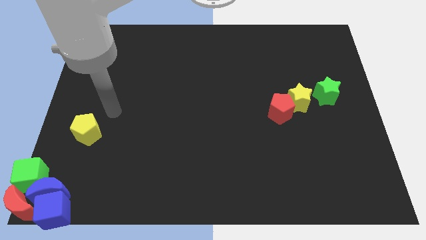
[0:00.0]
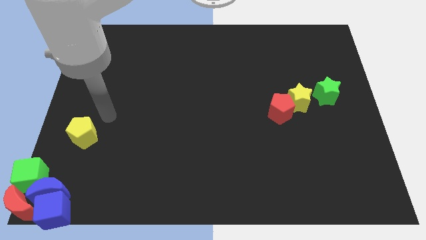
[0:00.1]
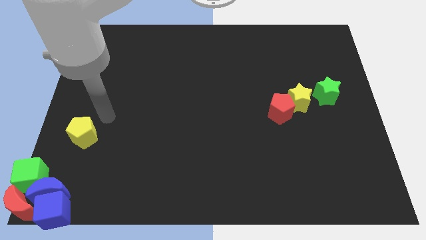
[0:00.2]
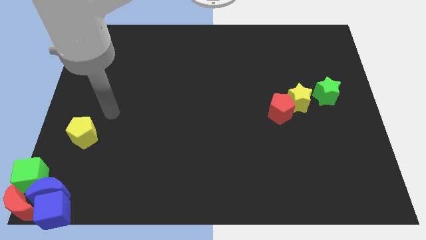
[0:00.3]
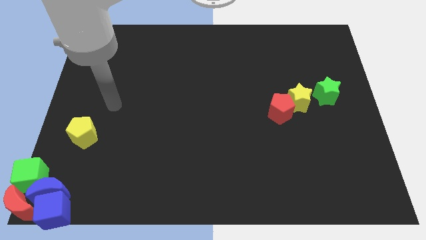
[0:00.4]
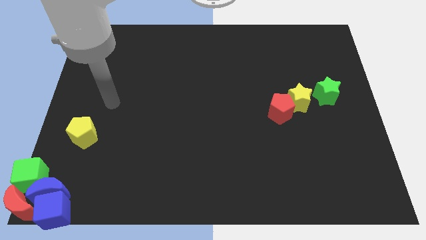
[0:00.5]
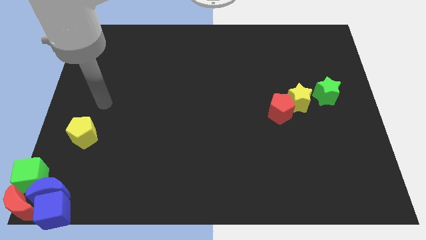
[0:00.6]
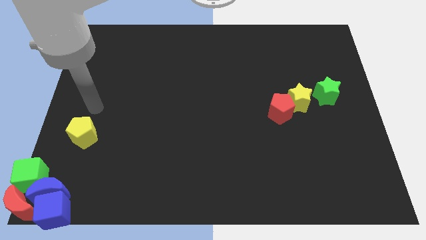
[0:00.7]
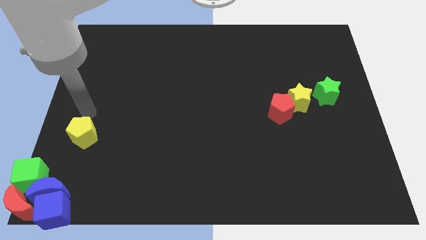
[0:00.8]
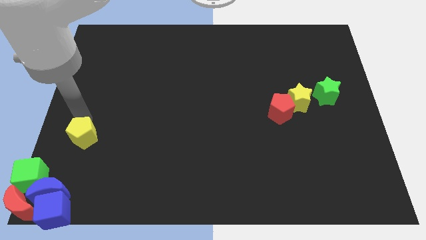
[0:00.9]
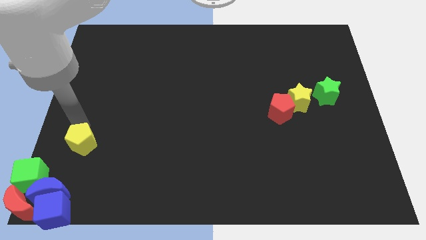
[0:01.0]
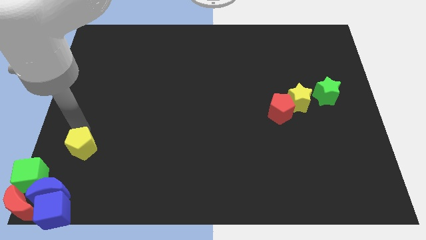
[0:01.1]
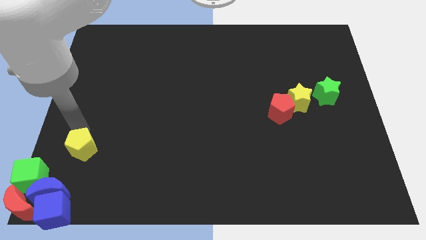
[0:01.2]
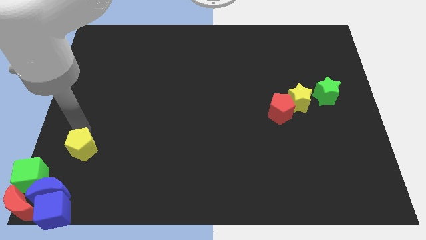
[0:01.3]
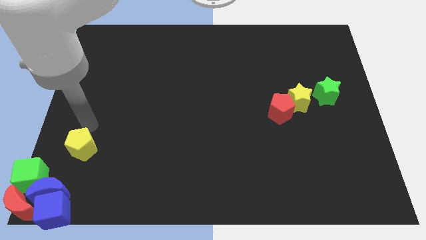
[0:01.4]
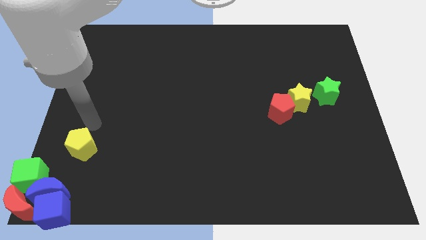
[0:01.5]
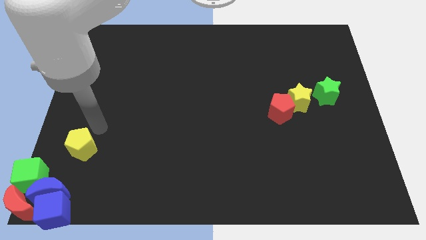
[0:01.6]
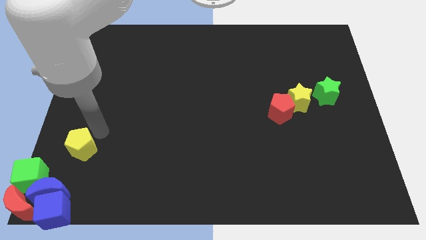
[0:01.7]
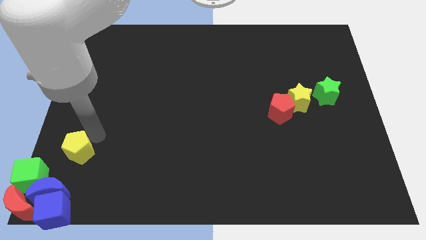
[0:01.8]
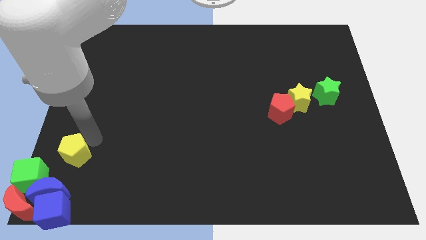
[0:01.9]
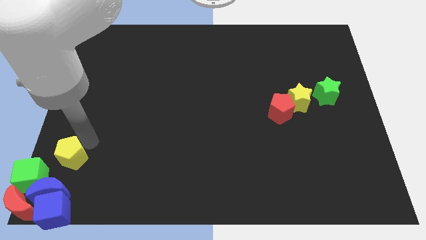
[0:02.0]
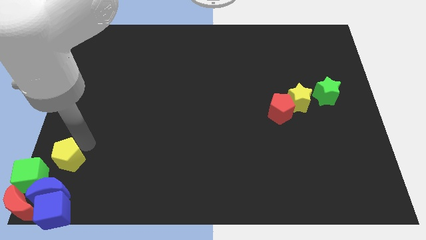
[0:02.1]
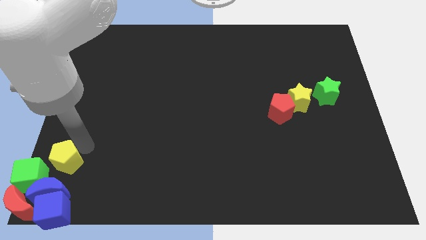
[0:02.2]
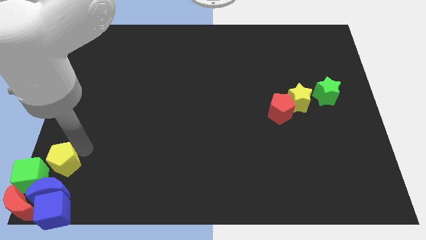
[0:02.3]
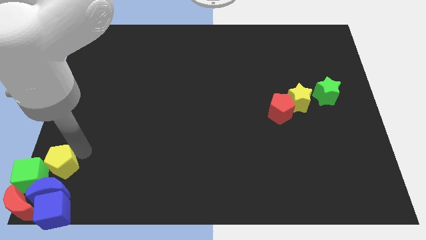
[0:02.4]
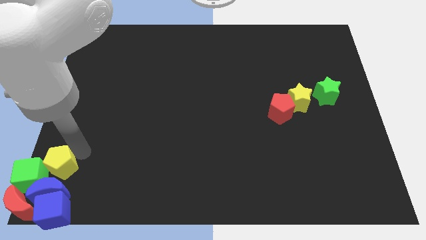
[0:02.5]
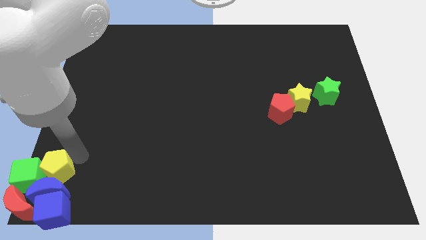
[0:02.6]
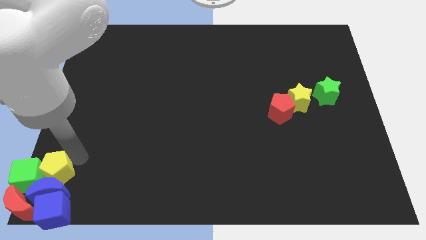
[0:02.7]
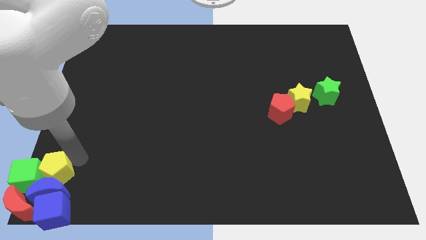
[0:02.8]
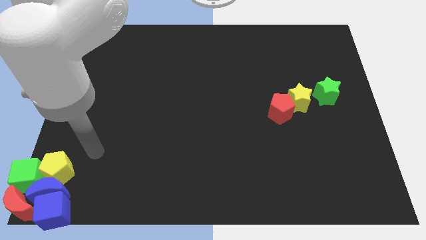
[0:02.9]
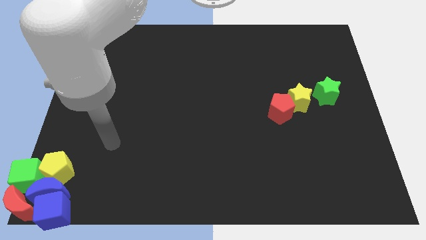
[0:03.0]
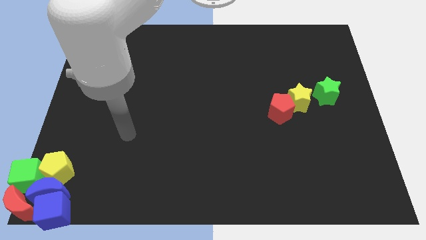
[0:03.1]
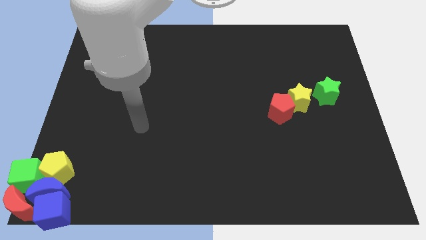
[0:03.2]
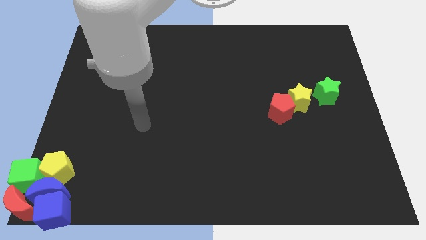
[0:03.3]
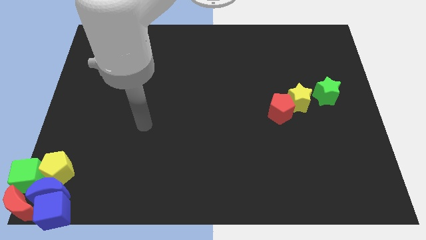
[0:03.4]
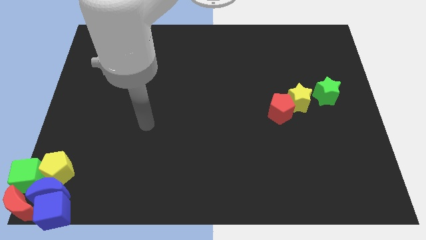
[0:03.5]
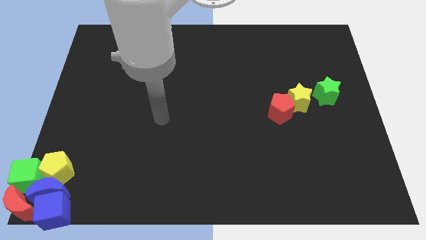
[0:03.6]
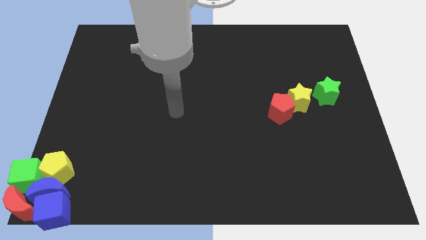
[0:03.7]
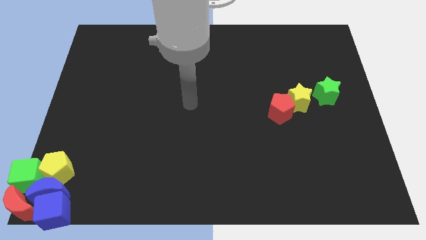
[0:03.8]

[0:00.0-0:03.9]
push the yellow pentagon to the right side of the green cube

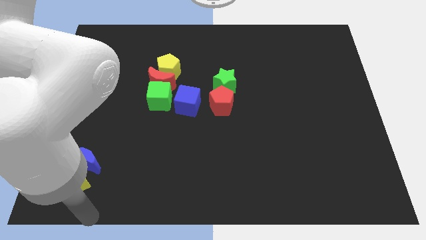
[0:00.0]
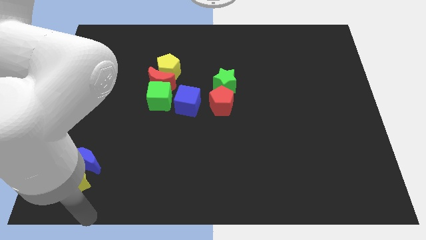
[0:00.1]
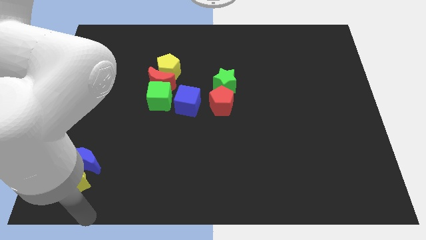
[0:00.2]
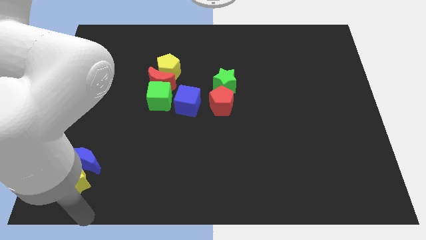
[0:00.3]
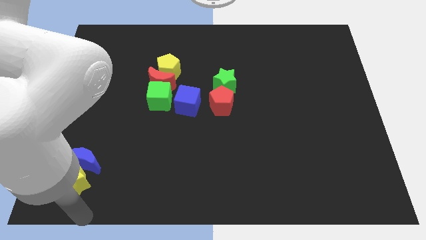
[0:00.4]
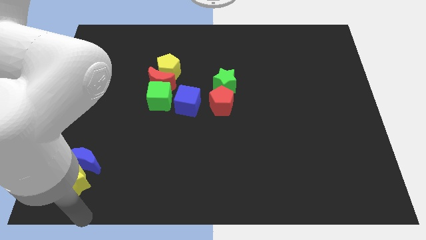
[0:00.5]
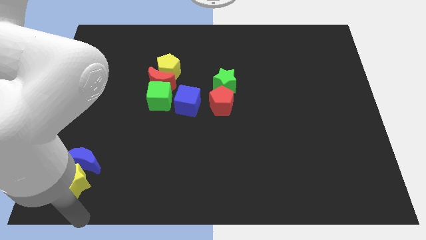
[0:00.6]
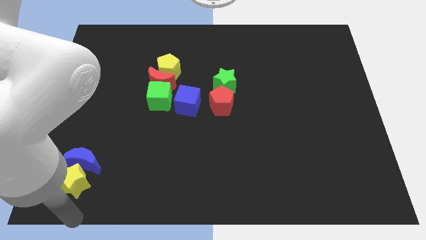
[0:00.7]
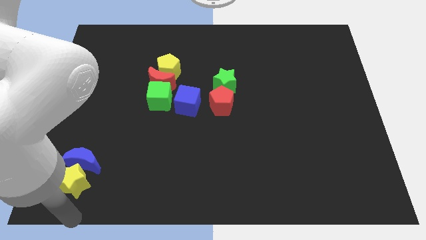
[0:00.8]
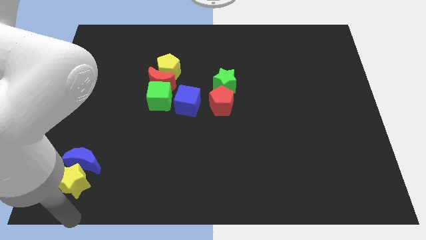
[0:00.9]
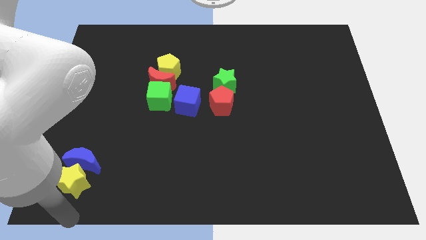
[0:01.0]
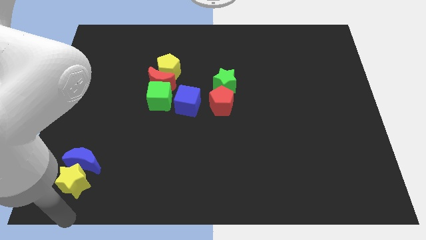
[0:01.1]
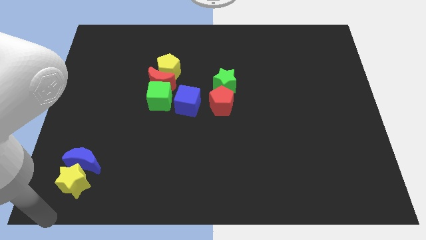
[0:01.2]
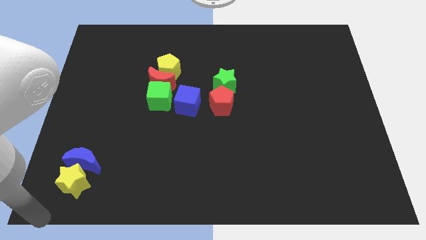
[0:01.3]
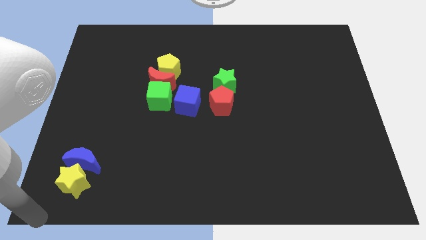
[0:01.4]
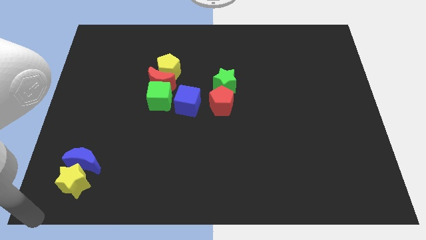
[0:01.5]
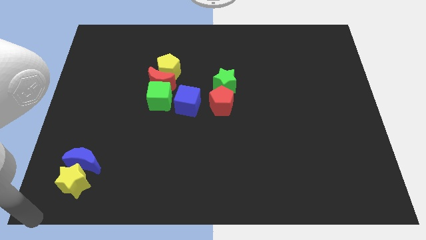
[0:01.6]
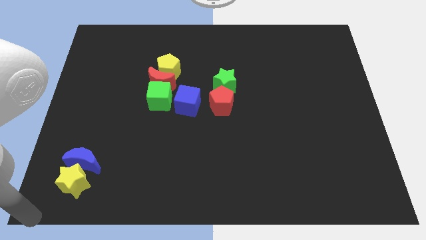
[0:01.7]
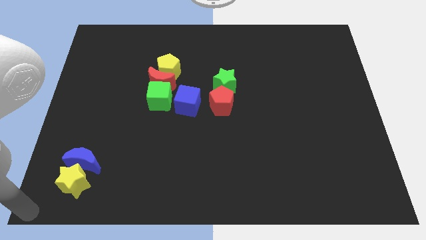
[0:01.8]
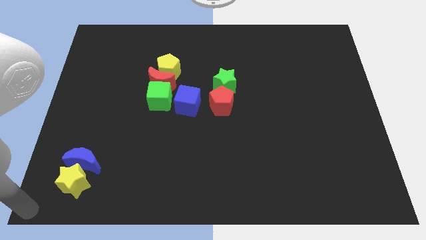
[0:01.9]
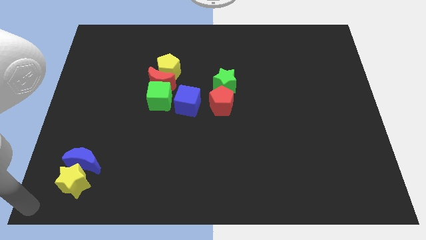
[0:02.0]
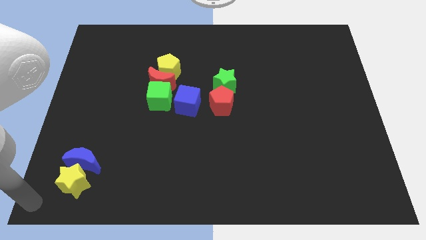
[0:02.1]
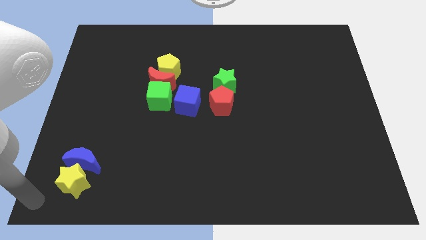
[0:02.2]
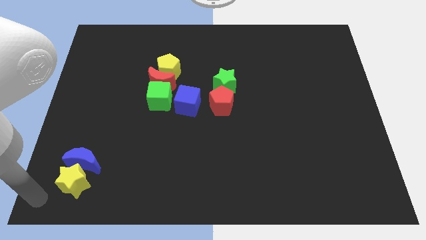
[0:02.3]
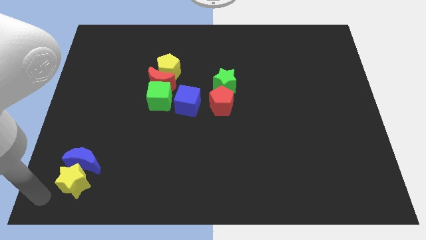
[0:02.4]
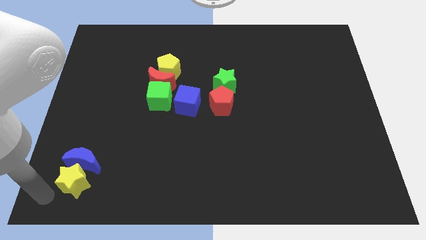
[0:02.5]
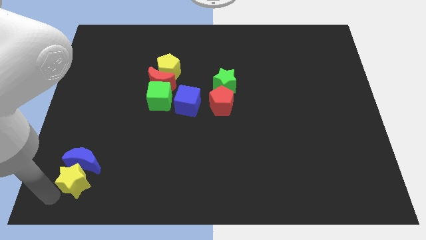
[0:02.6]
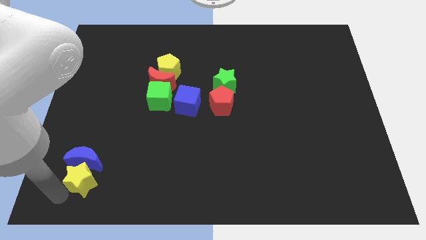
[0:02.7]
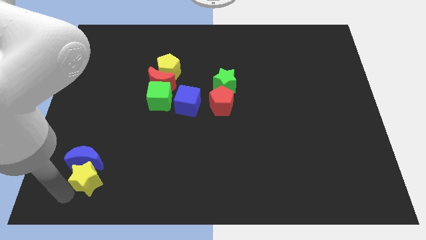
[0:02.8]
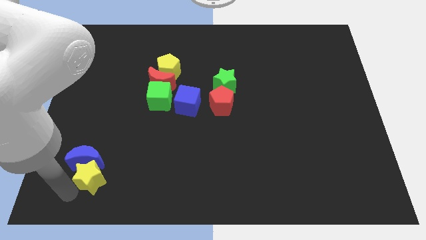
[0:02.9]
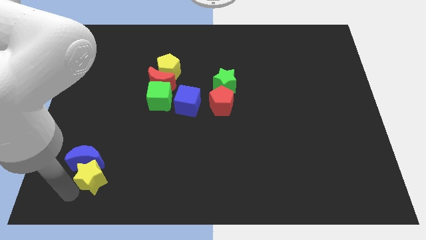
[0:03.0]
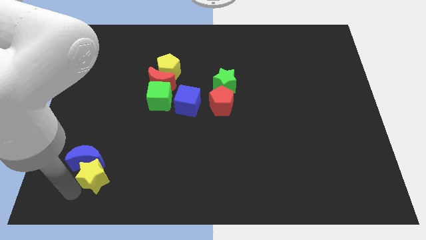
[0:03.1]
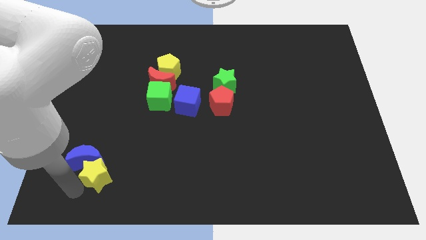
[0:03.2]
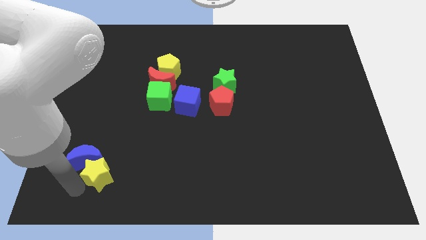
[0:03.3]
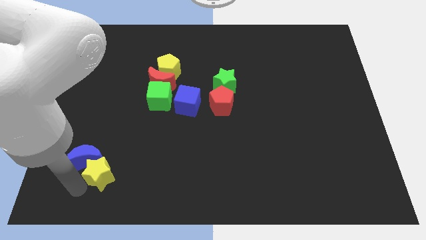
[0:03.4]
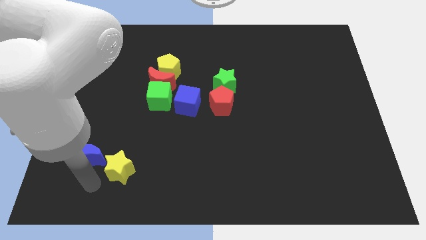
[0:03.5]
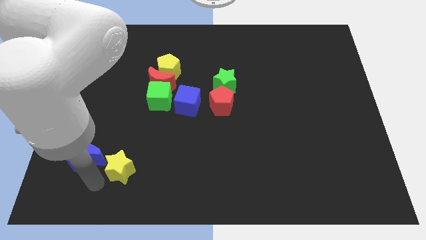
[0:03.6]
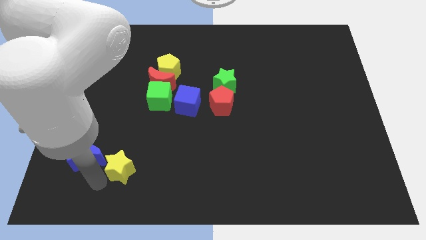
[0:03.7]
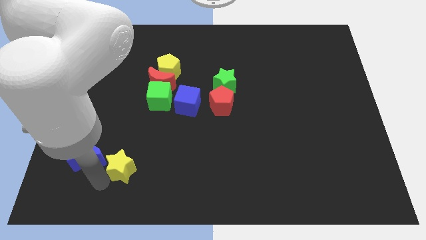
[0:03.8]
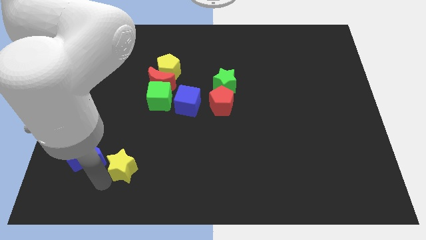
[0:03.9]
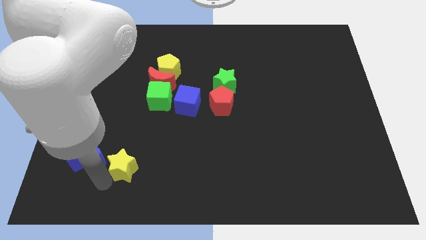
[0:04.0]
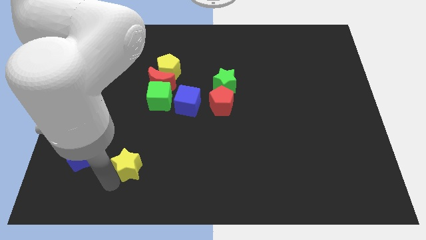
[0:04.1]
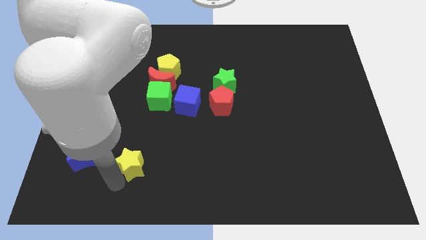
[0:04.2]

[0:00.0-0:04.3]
separate the yellow star from the blue moon

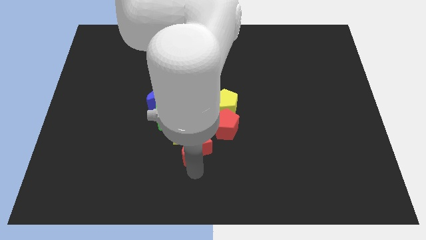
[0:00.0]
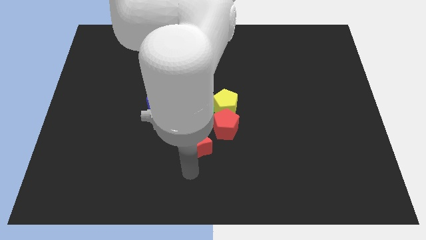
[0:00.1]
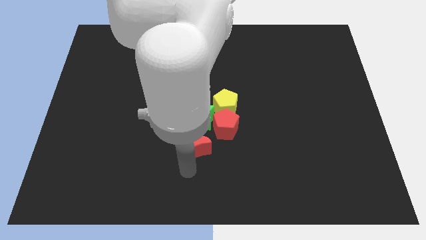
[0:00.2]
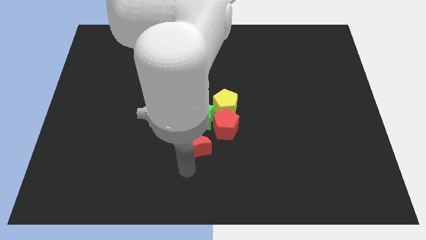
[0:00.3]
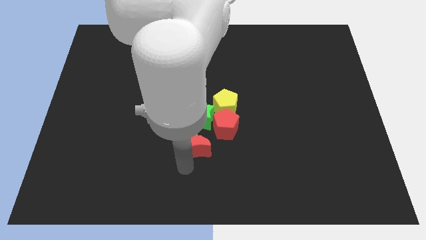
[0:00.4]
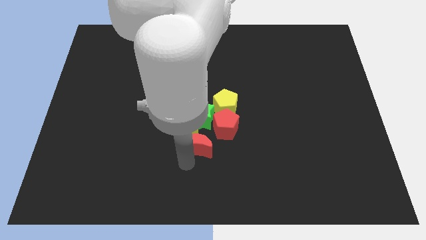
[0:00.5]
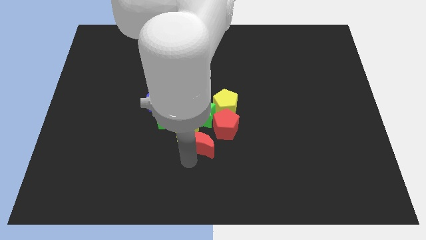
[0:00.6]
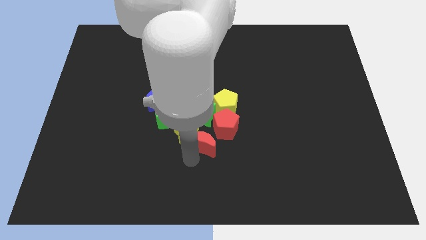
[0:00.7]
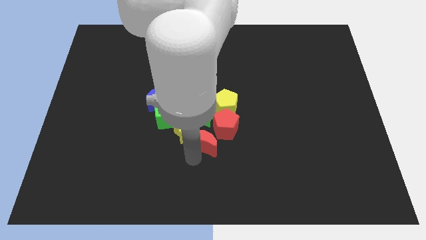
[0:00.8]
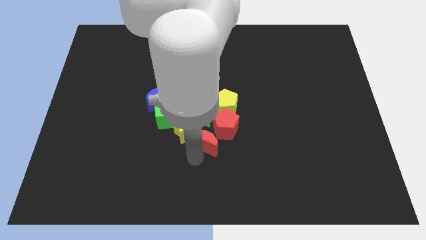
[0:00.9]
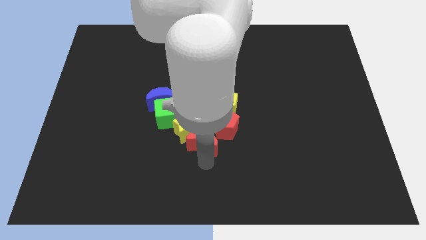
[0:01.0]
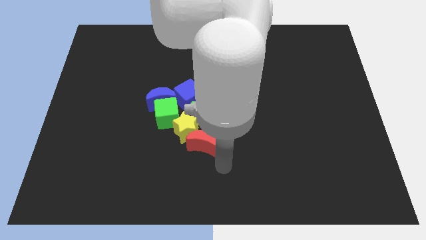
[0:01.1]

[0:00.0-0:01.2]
move red crescent into the group of blocks
